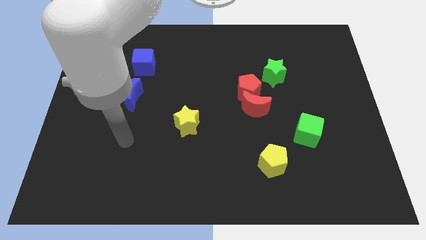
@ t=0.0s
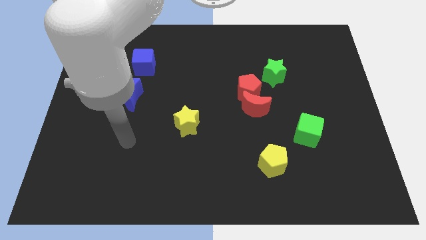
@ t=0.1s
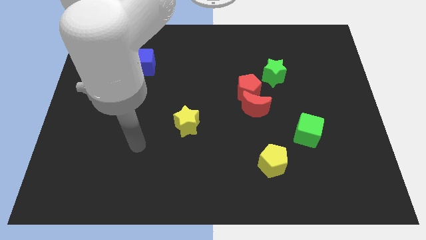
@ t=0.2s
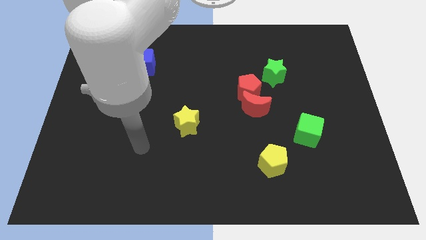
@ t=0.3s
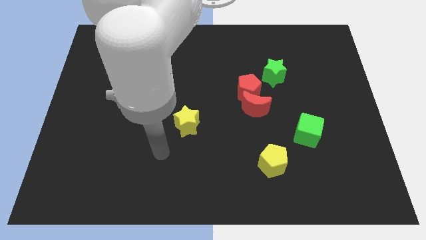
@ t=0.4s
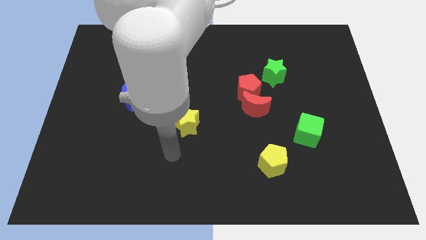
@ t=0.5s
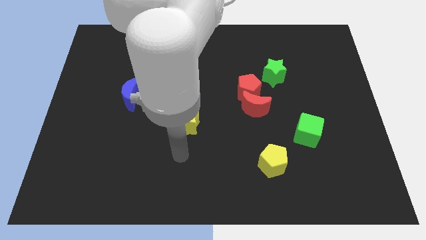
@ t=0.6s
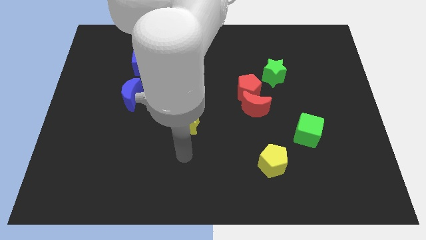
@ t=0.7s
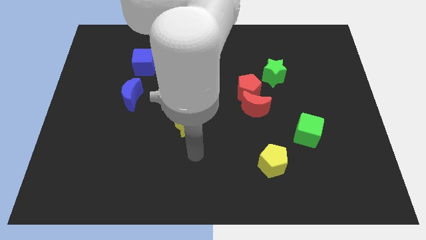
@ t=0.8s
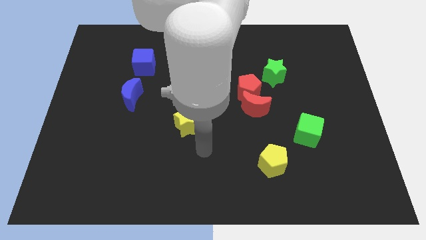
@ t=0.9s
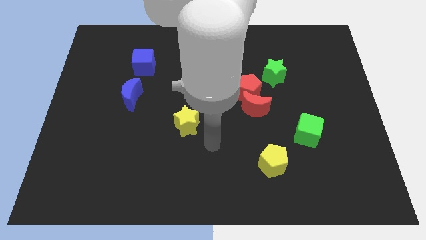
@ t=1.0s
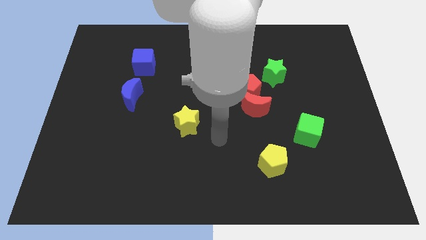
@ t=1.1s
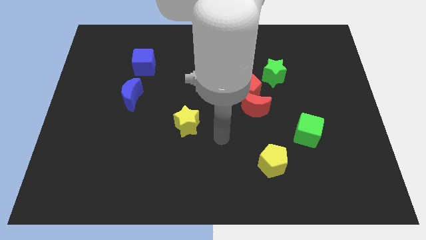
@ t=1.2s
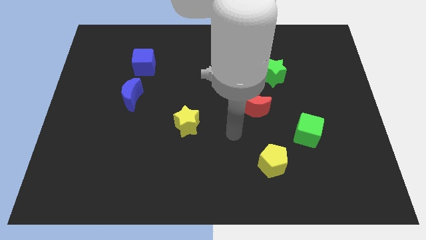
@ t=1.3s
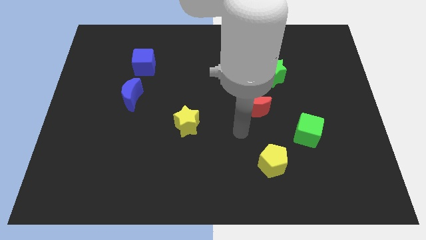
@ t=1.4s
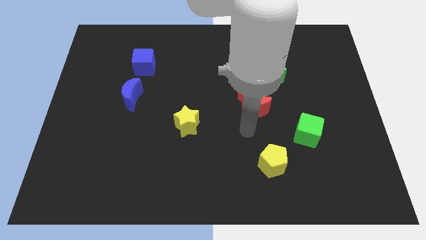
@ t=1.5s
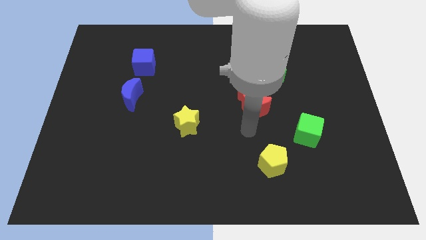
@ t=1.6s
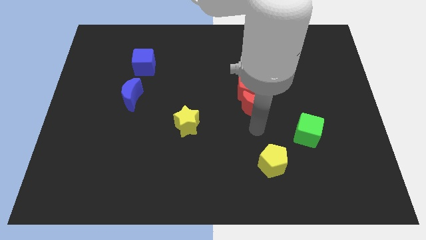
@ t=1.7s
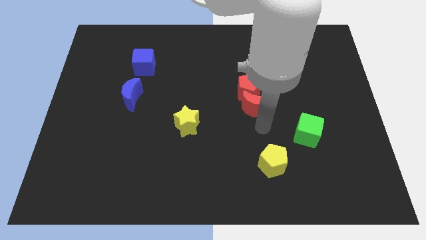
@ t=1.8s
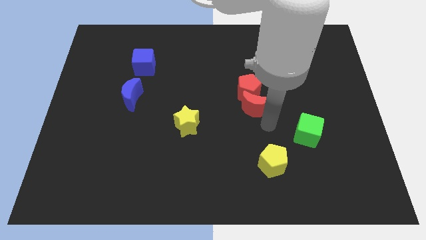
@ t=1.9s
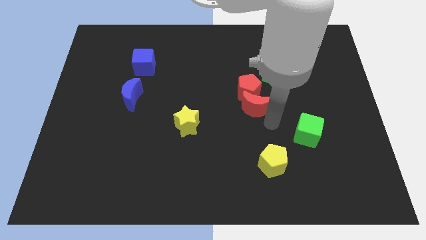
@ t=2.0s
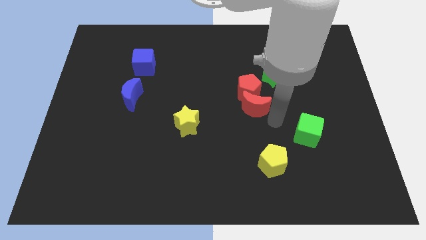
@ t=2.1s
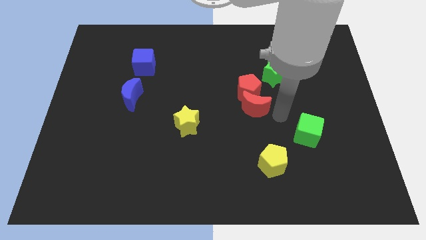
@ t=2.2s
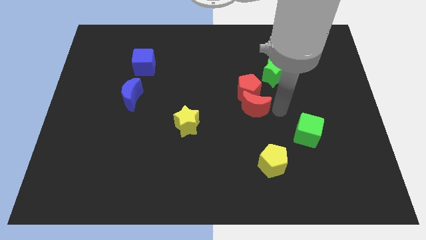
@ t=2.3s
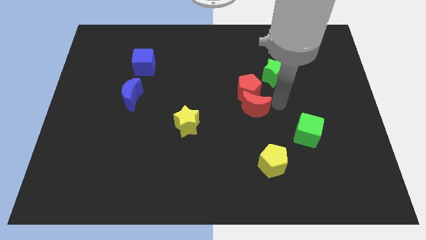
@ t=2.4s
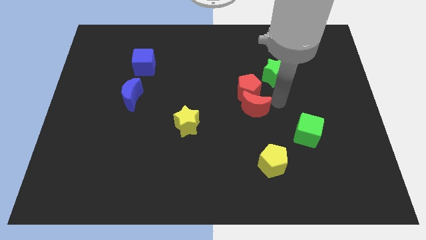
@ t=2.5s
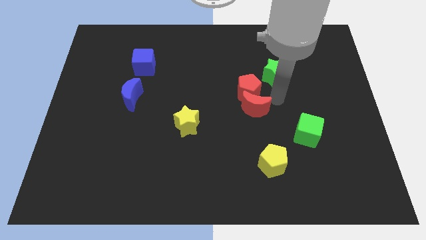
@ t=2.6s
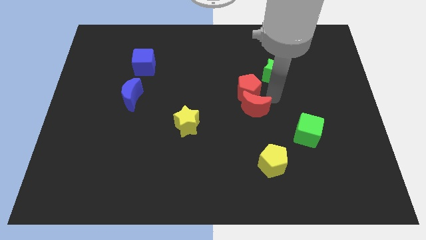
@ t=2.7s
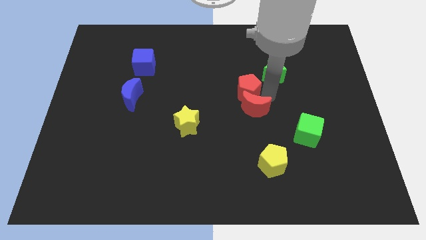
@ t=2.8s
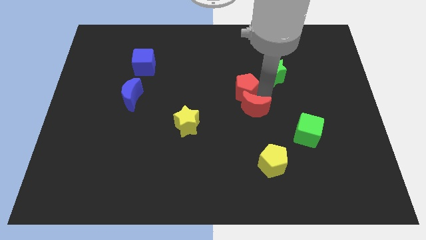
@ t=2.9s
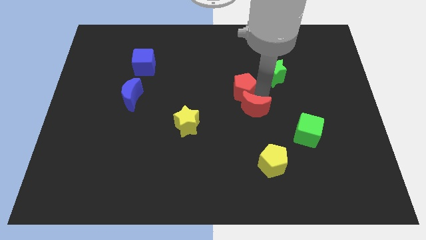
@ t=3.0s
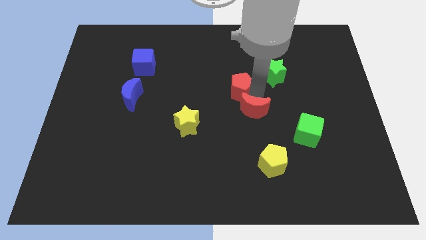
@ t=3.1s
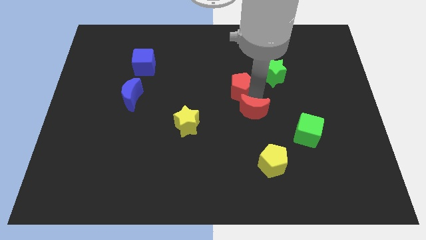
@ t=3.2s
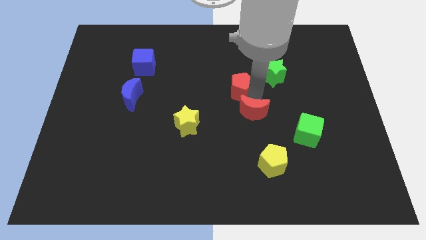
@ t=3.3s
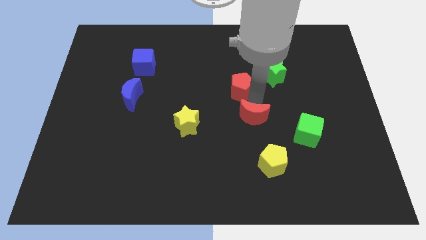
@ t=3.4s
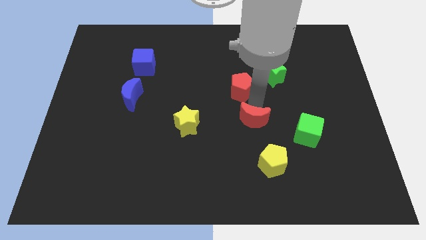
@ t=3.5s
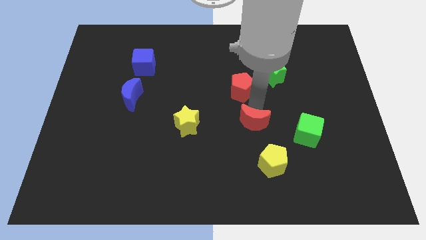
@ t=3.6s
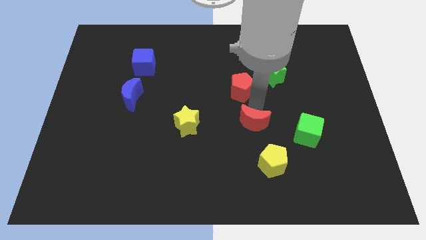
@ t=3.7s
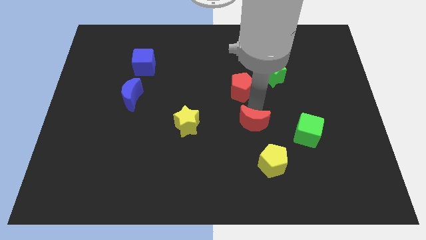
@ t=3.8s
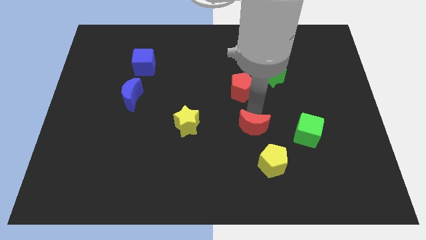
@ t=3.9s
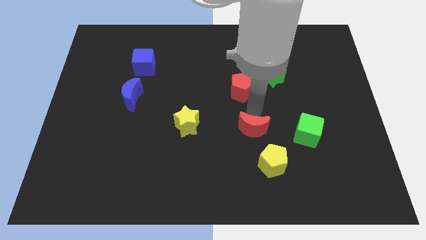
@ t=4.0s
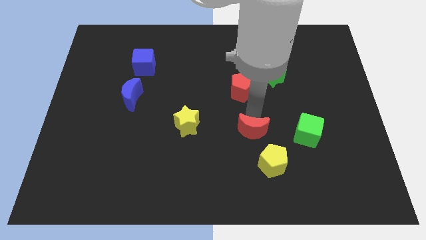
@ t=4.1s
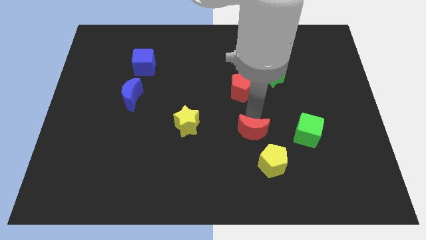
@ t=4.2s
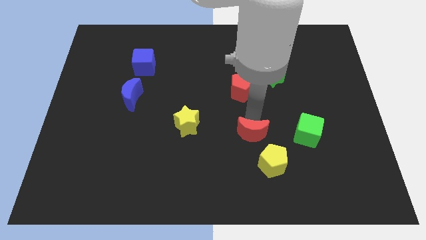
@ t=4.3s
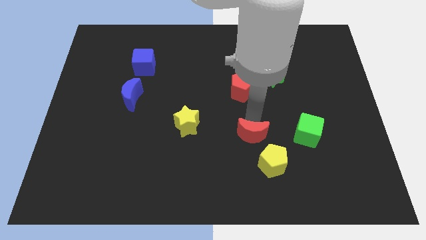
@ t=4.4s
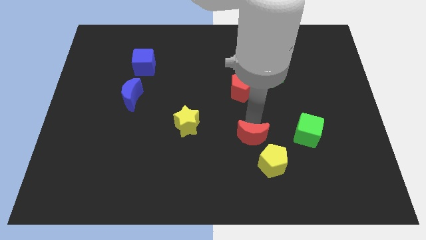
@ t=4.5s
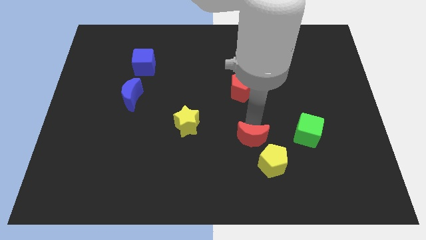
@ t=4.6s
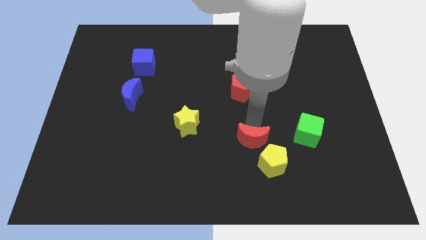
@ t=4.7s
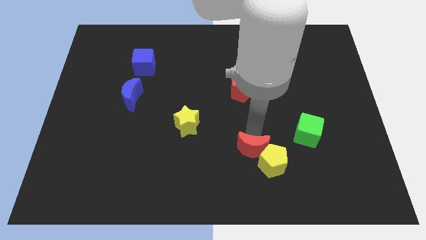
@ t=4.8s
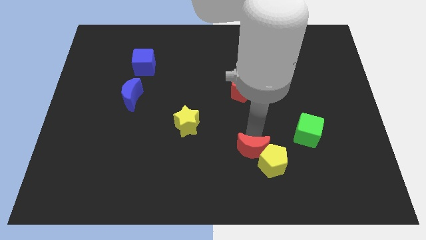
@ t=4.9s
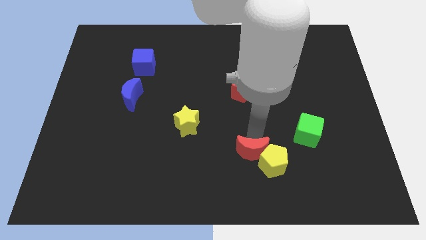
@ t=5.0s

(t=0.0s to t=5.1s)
slide the red moon close to the yellow pentagon

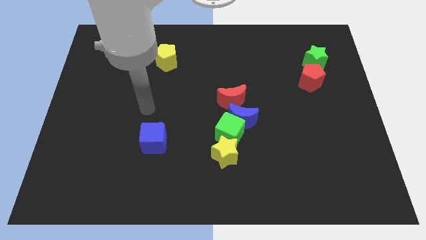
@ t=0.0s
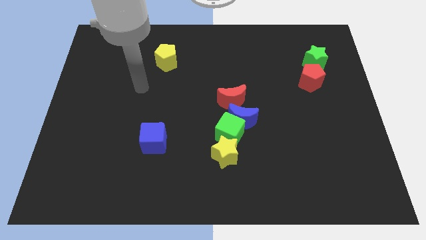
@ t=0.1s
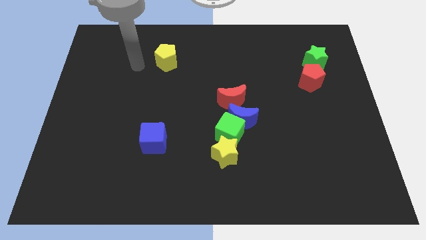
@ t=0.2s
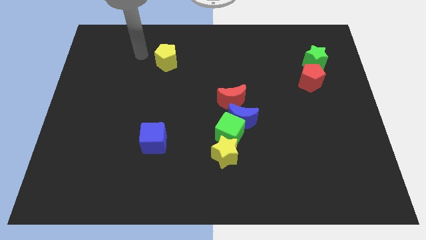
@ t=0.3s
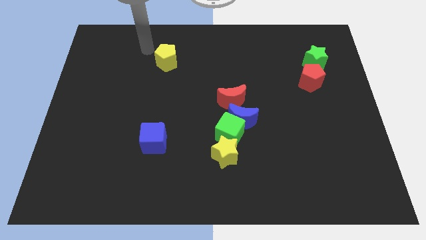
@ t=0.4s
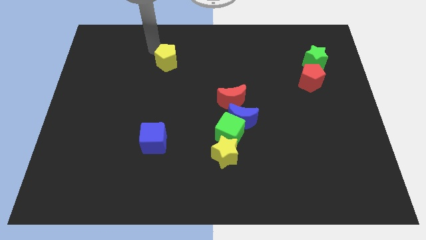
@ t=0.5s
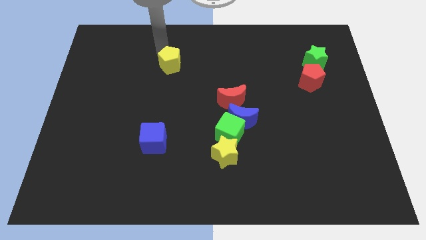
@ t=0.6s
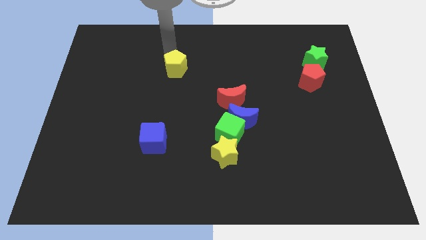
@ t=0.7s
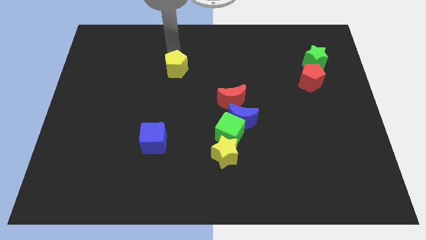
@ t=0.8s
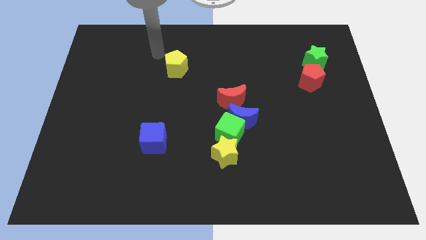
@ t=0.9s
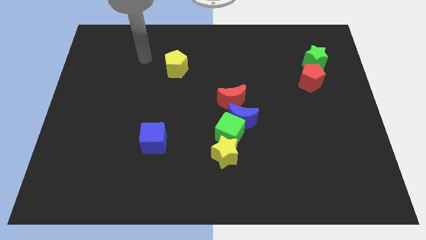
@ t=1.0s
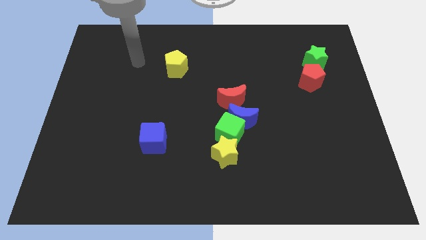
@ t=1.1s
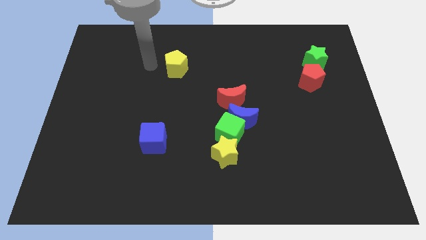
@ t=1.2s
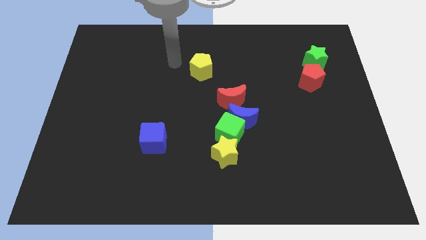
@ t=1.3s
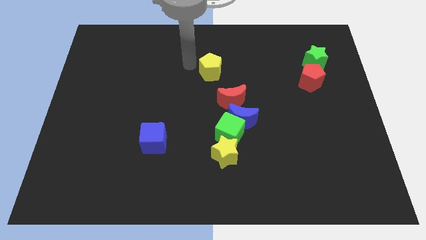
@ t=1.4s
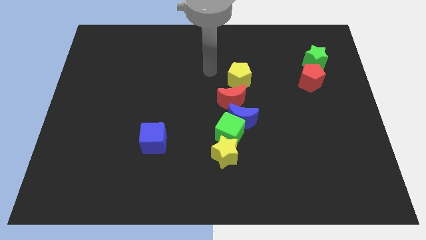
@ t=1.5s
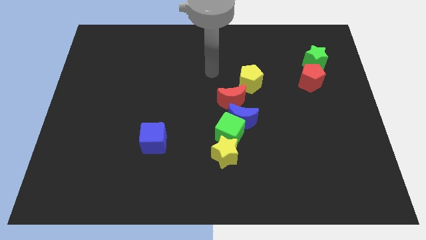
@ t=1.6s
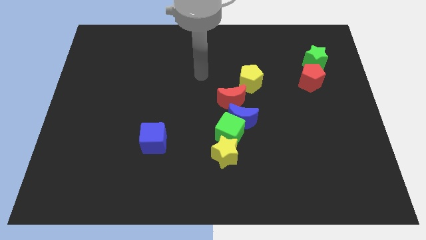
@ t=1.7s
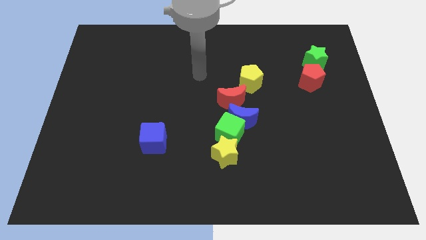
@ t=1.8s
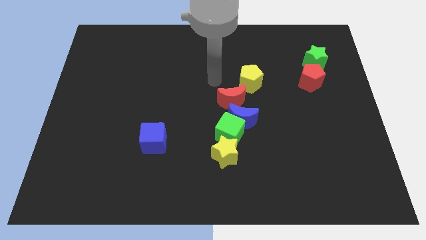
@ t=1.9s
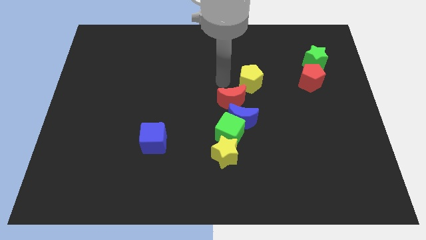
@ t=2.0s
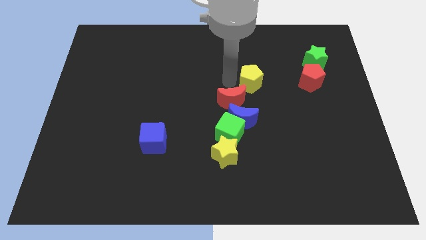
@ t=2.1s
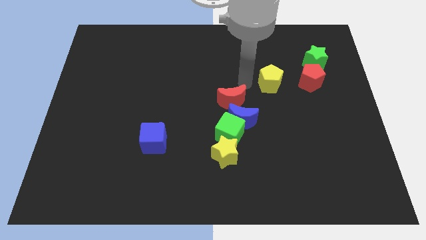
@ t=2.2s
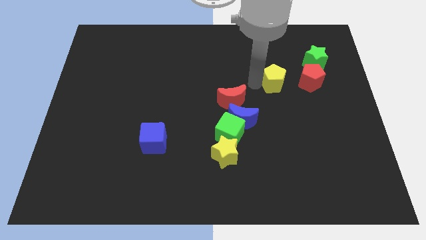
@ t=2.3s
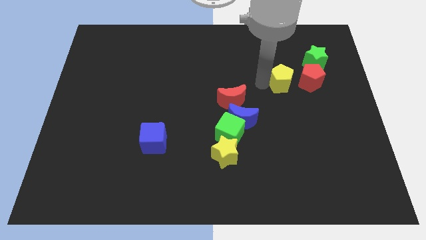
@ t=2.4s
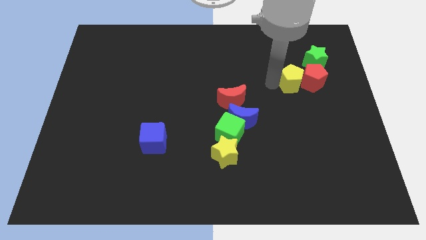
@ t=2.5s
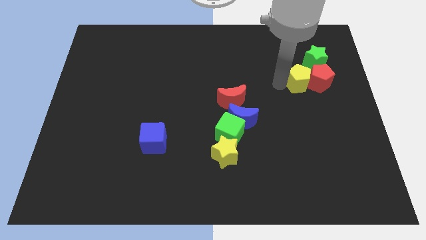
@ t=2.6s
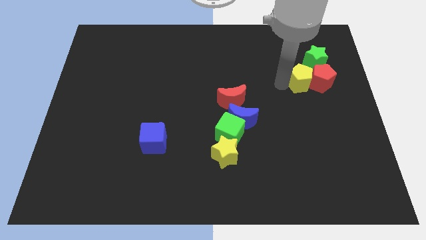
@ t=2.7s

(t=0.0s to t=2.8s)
move the yellow pentagon next to the red pentagon

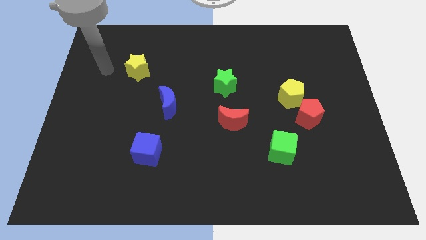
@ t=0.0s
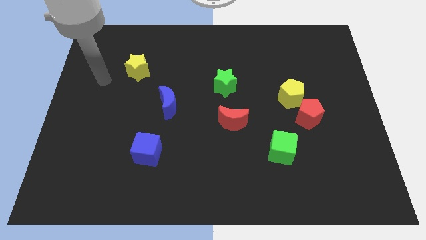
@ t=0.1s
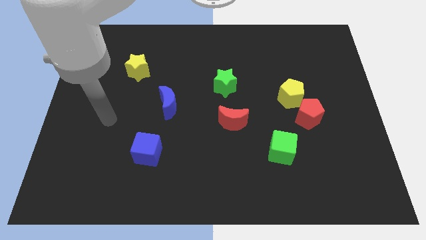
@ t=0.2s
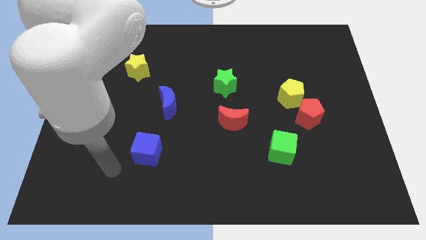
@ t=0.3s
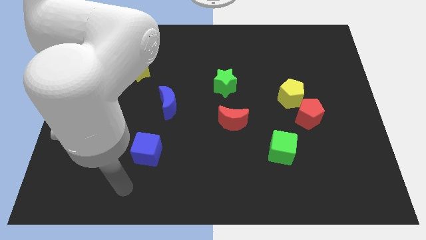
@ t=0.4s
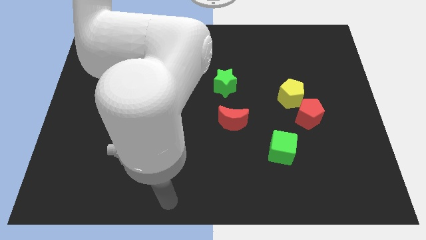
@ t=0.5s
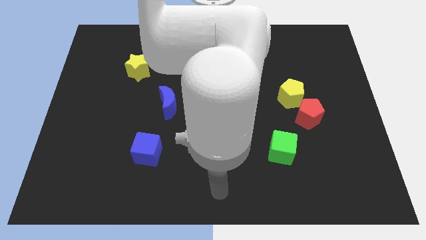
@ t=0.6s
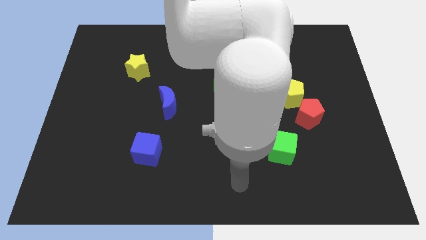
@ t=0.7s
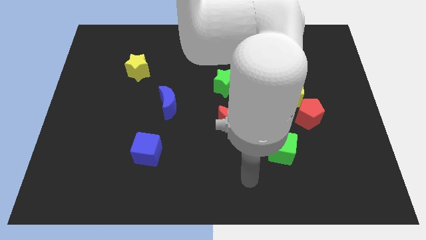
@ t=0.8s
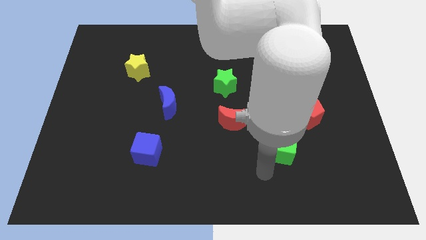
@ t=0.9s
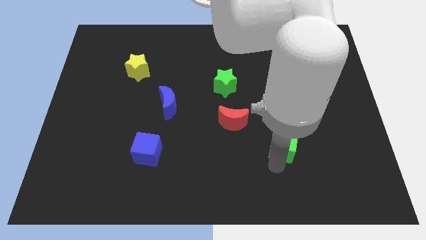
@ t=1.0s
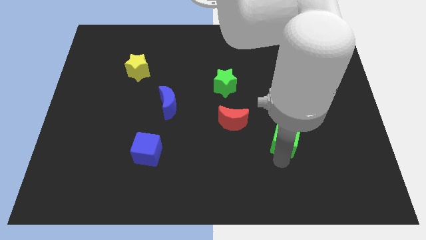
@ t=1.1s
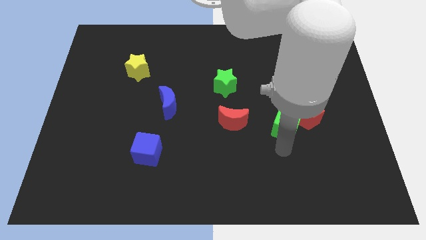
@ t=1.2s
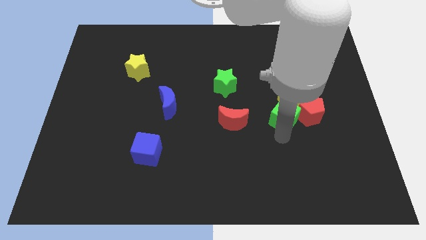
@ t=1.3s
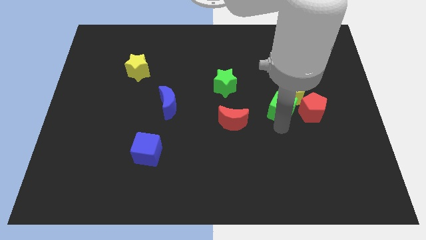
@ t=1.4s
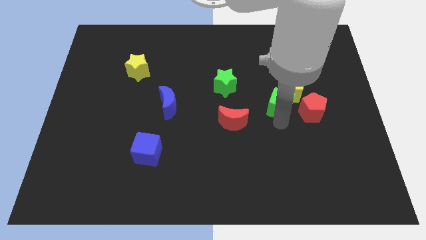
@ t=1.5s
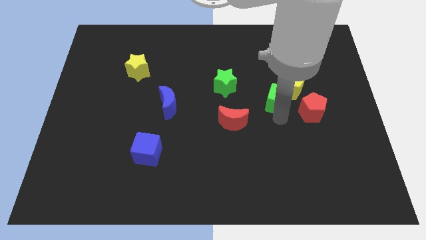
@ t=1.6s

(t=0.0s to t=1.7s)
slide the green cube close to the yellow pentagon
